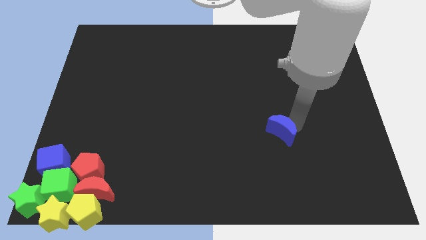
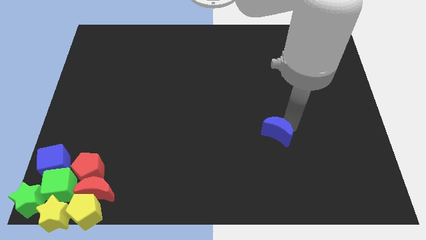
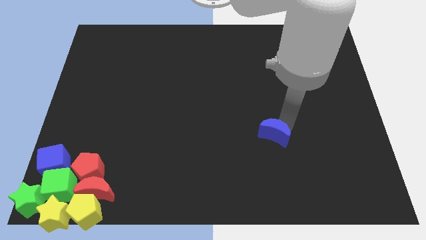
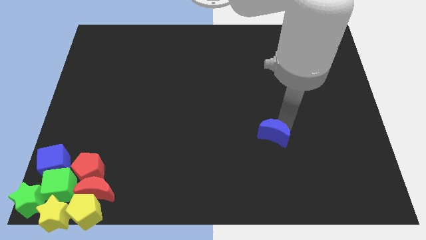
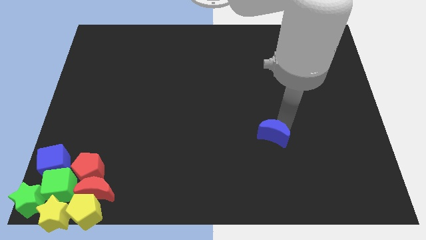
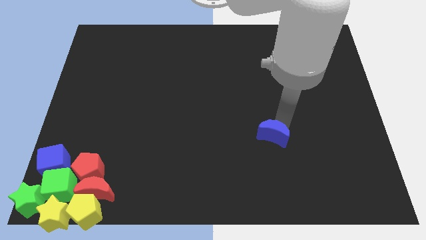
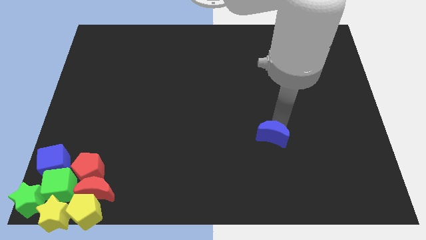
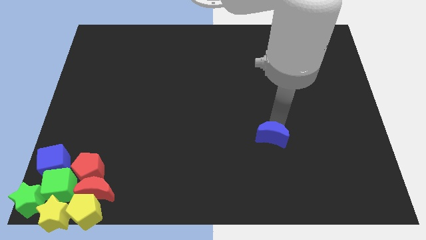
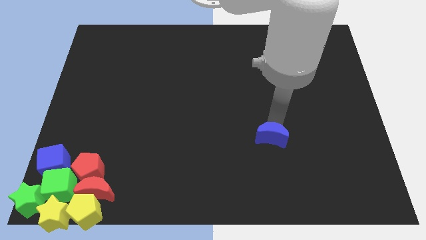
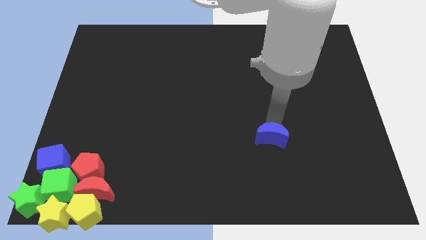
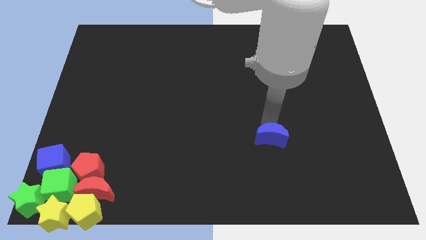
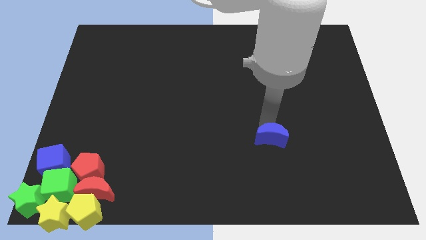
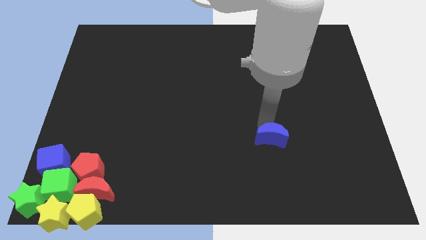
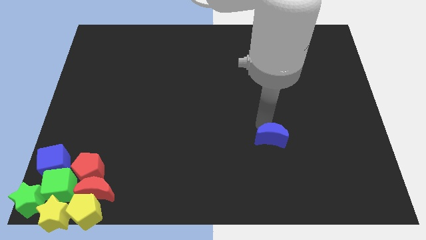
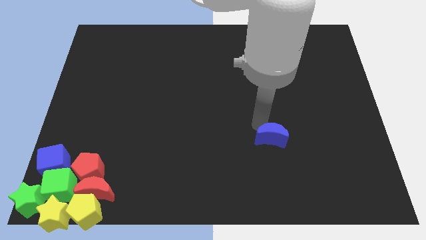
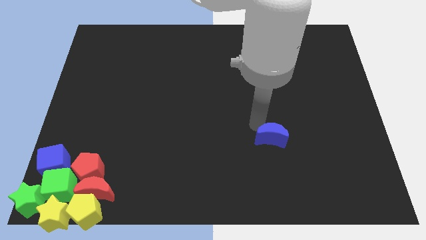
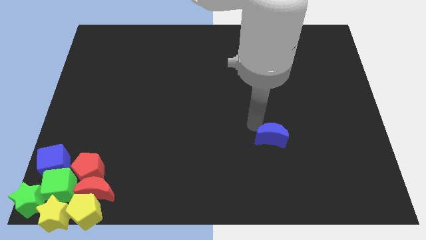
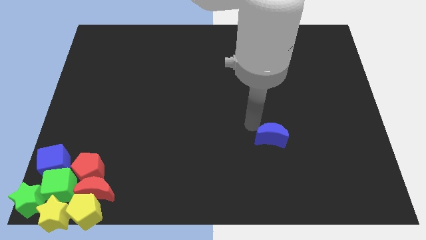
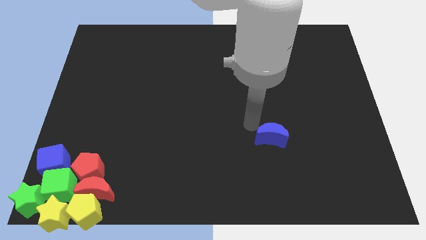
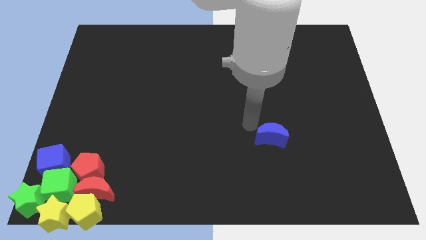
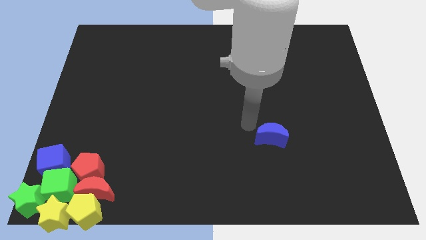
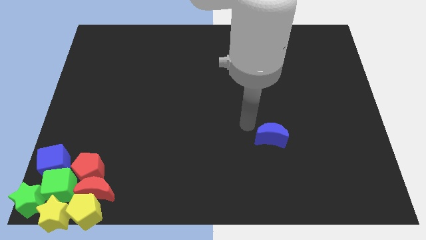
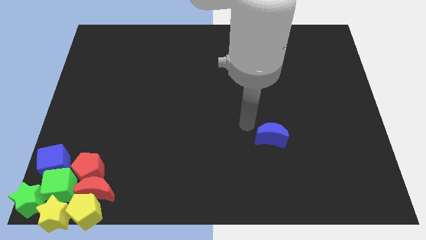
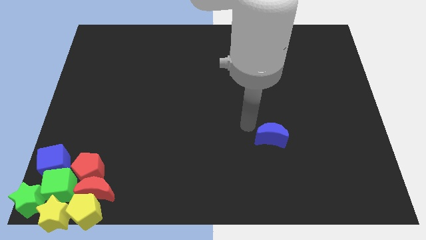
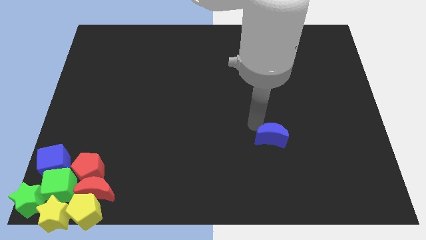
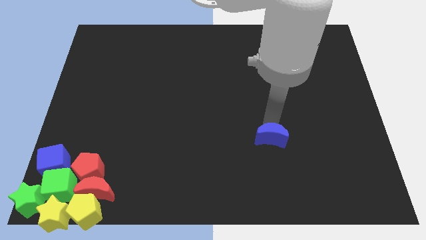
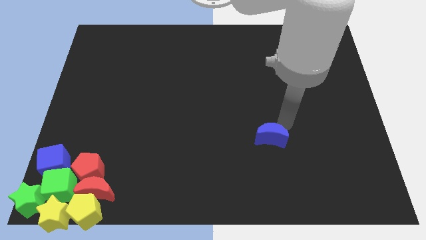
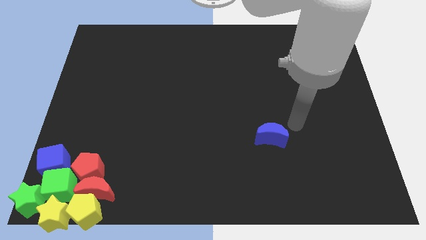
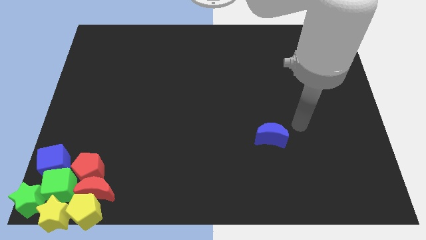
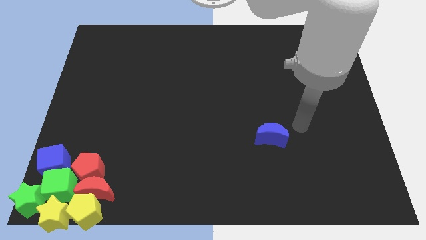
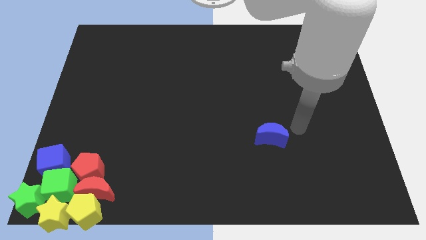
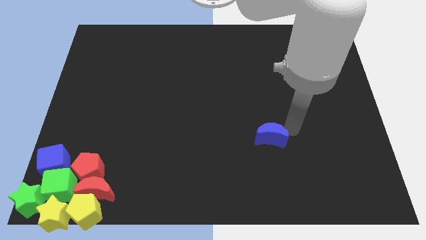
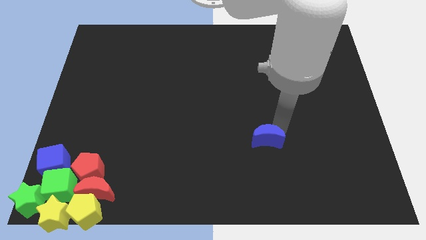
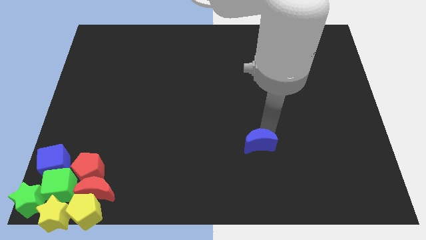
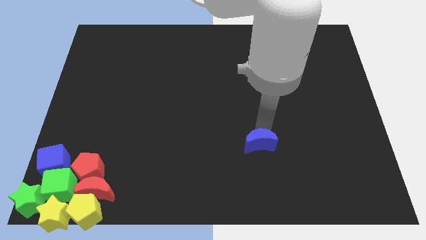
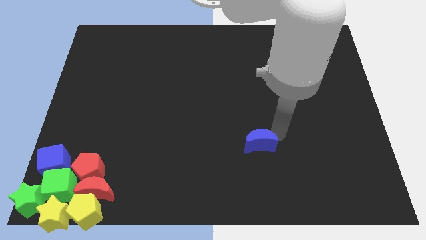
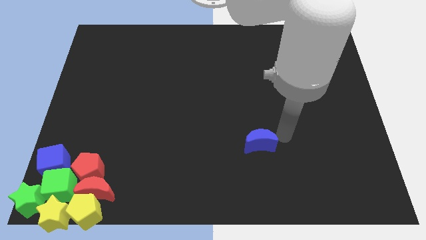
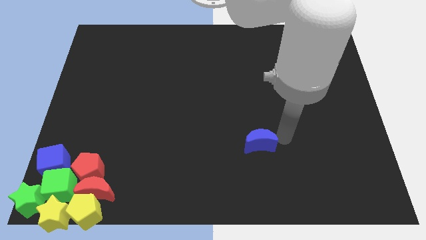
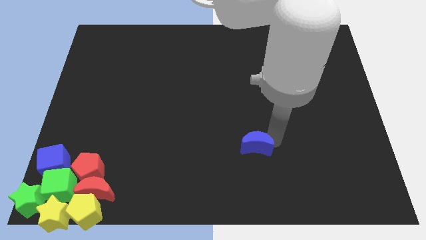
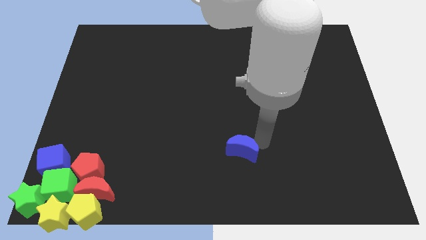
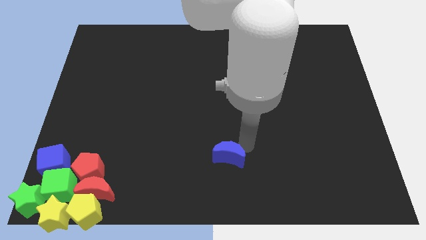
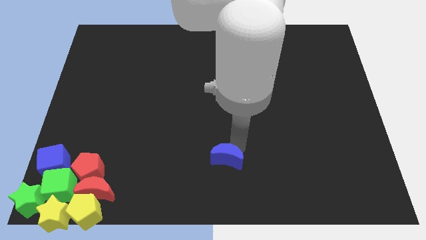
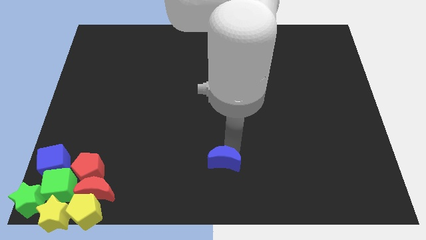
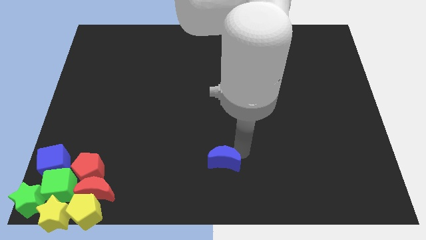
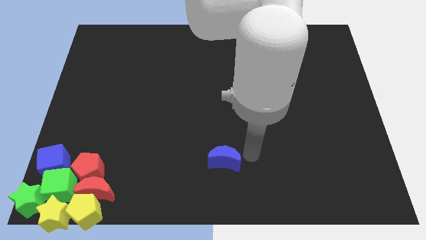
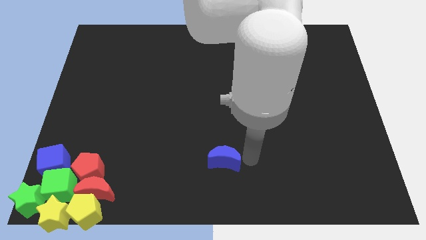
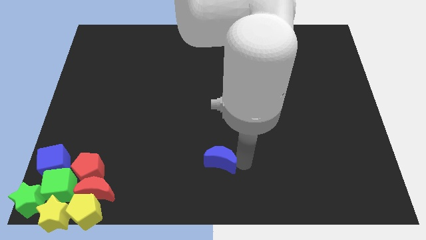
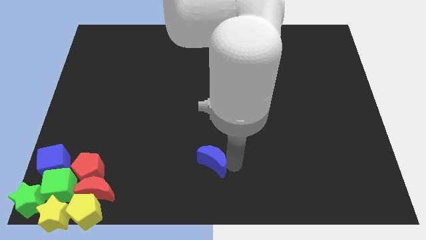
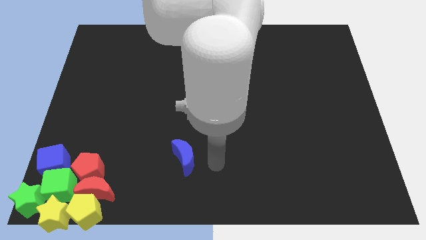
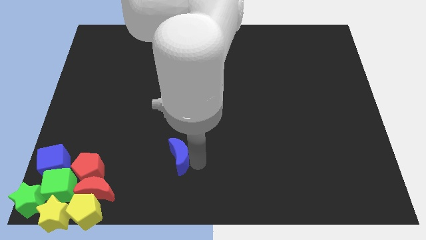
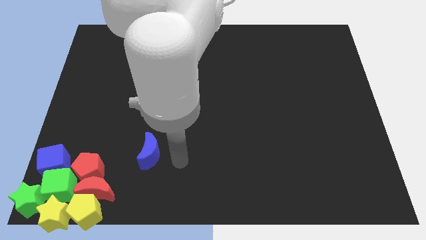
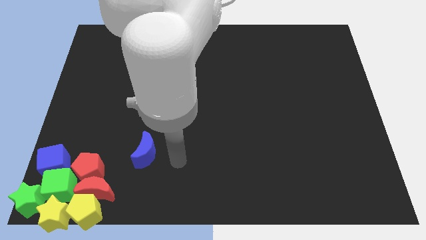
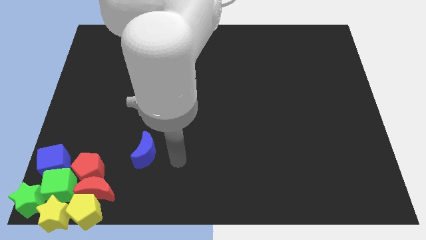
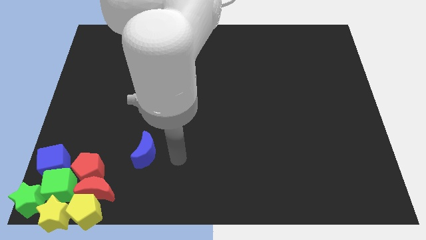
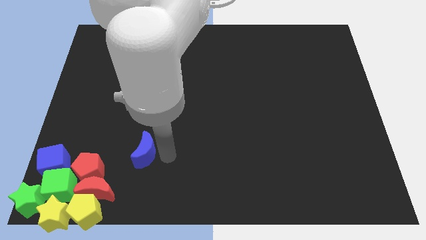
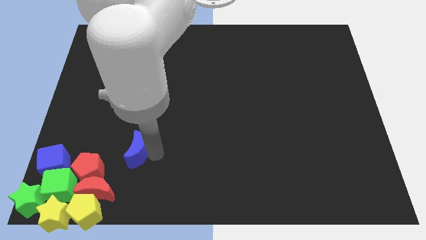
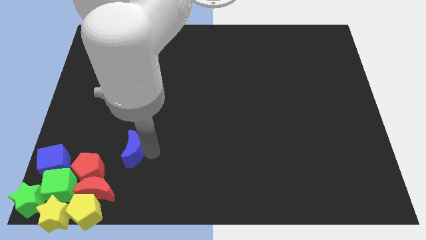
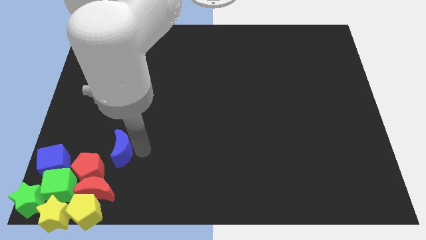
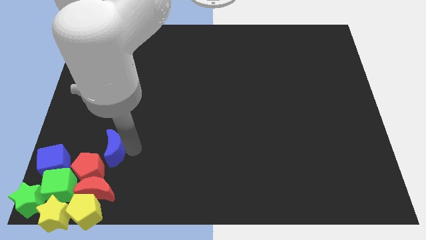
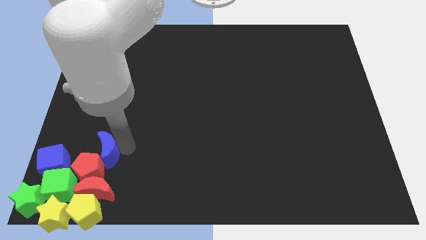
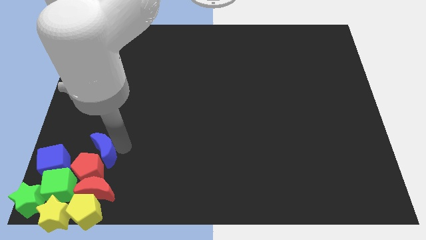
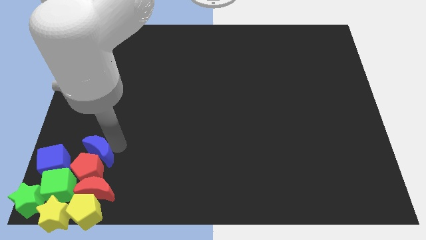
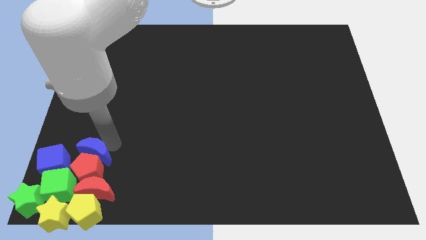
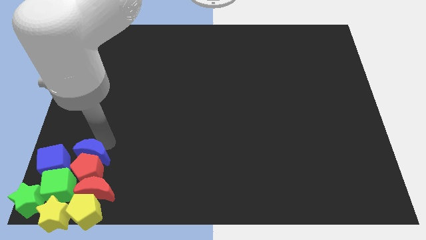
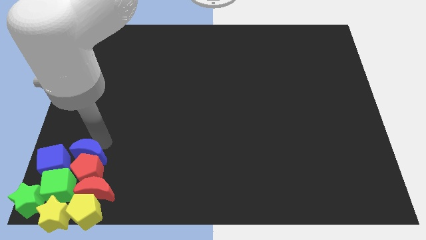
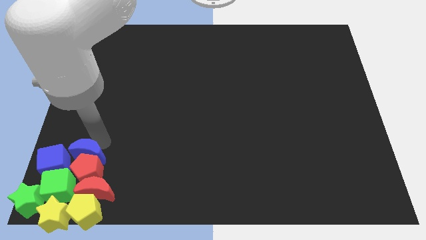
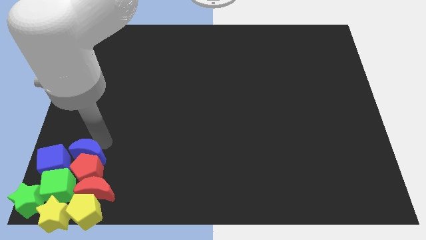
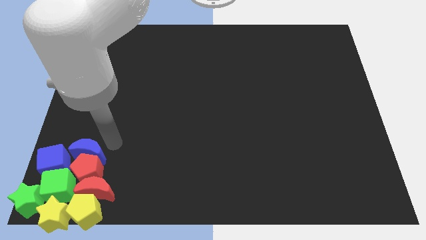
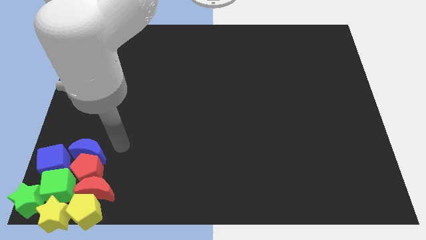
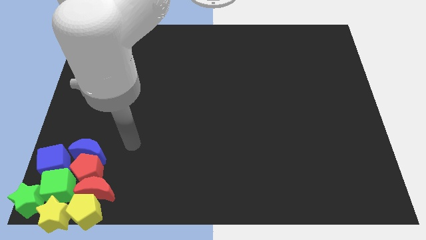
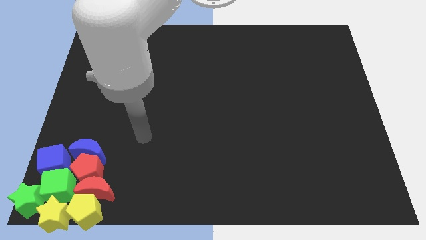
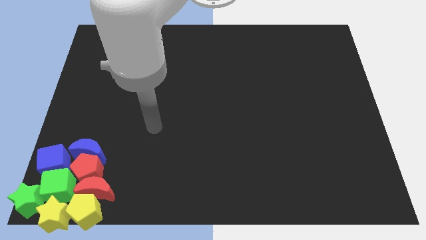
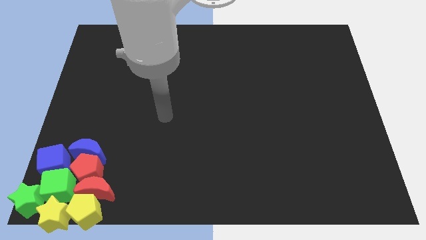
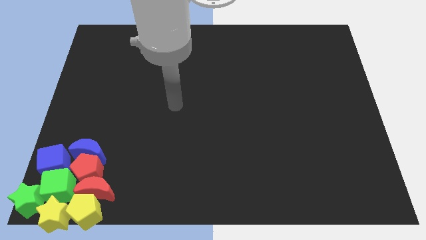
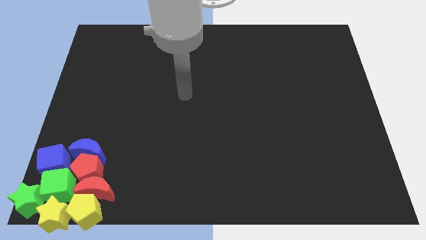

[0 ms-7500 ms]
group up all the blocks

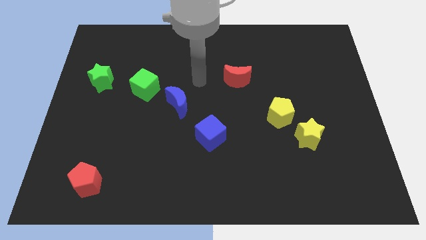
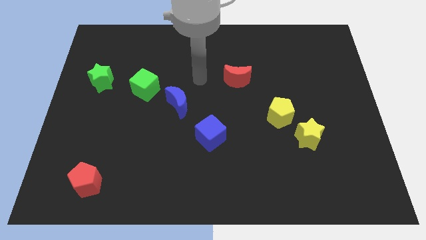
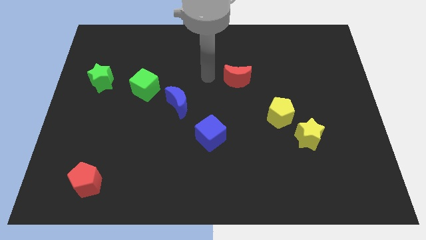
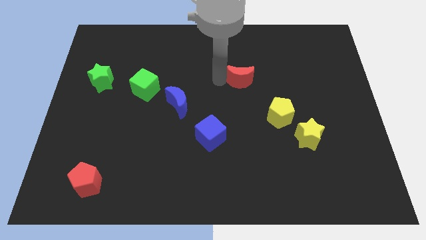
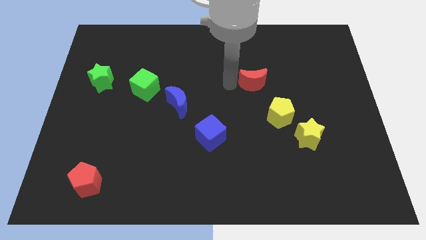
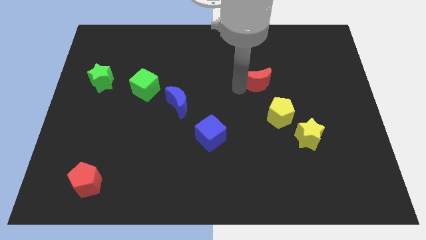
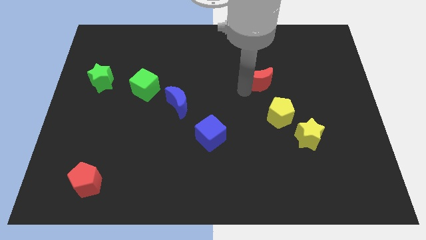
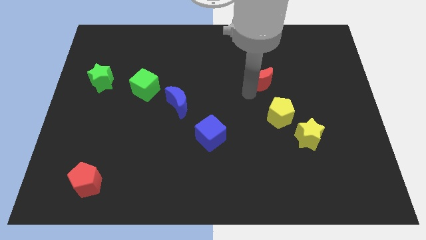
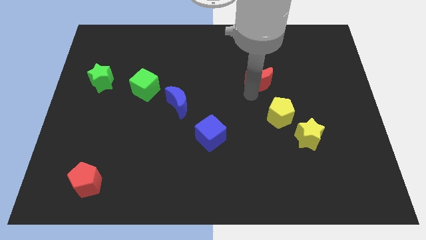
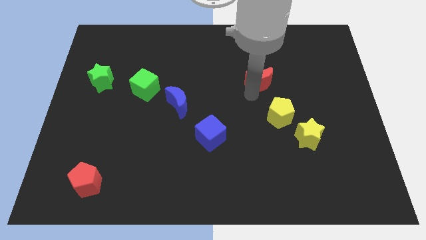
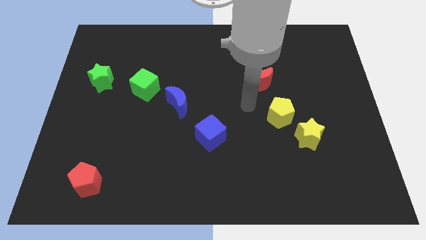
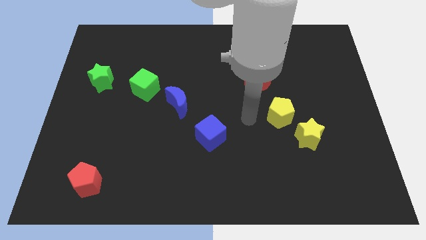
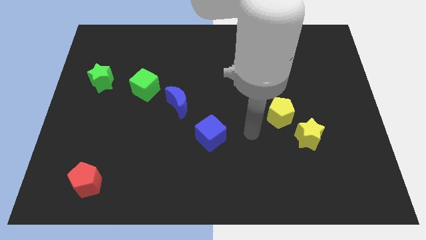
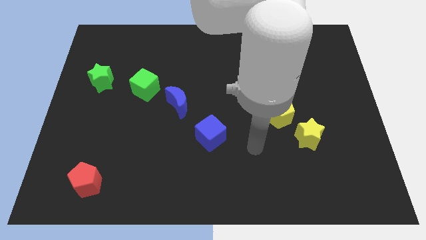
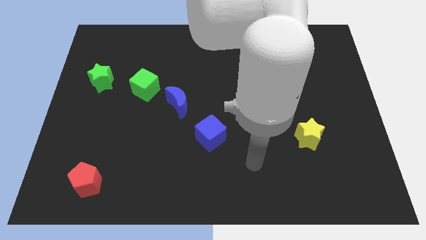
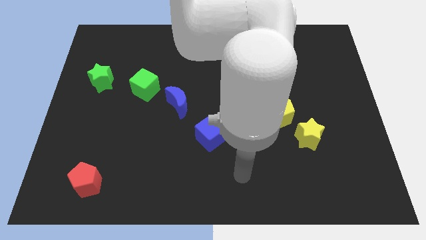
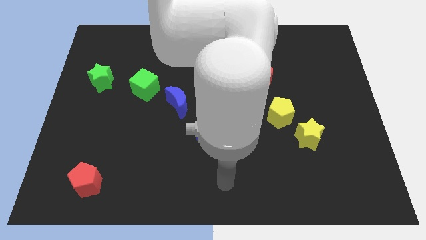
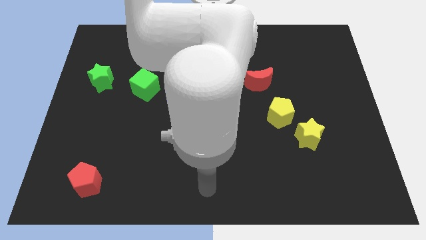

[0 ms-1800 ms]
move the red moon diagonally to the yellow pentagon
